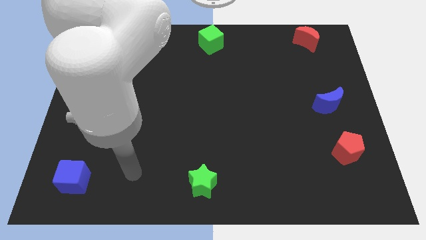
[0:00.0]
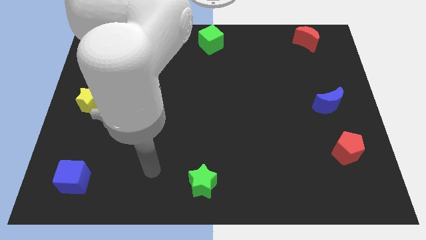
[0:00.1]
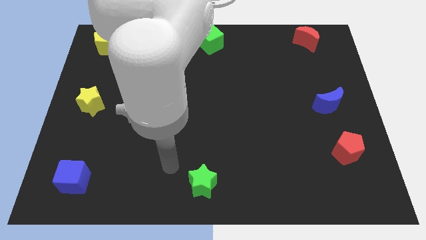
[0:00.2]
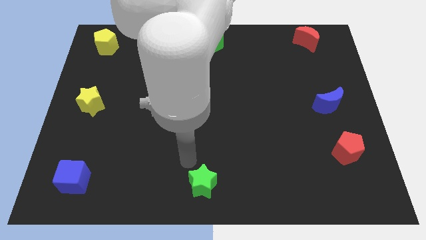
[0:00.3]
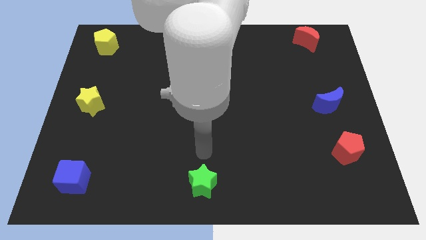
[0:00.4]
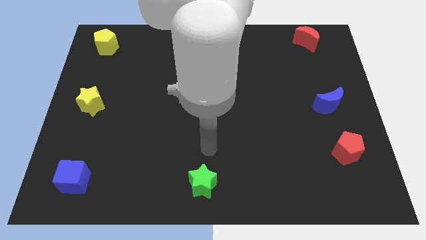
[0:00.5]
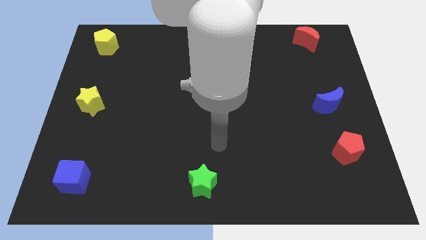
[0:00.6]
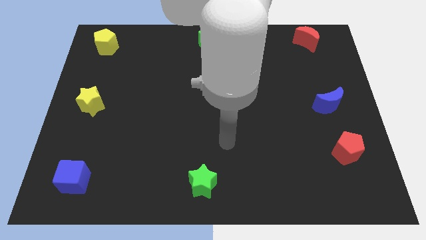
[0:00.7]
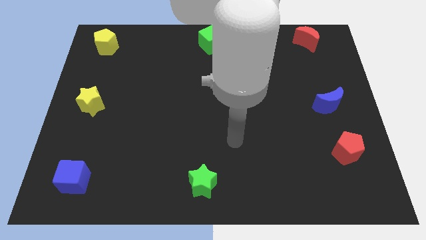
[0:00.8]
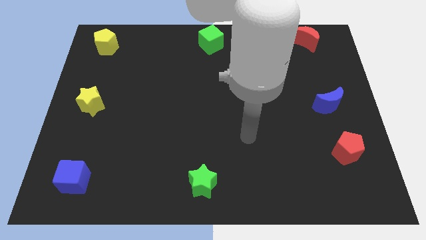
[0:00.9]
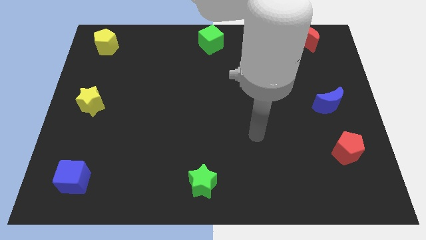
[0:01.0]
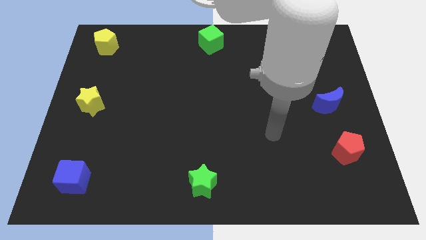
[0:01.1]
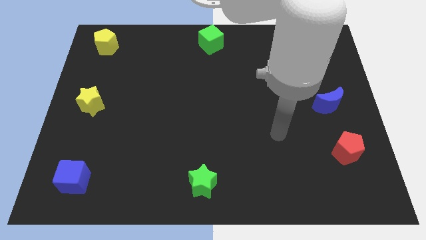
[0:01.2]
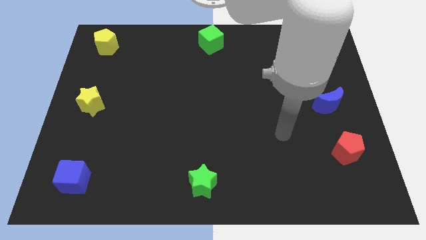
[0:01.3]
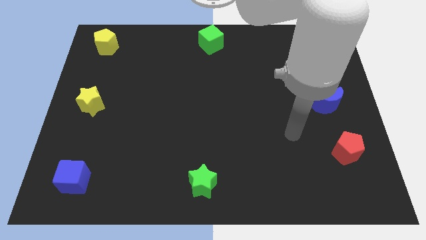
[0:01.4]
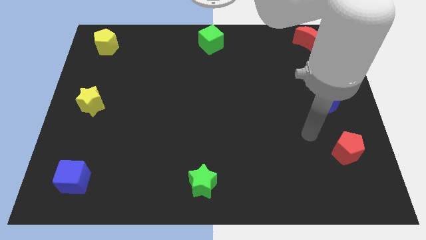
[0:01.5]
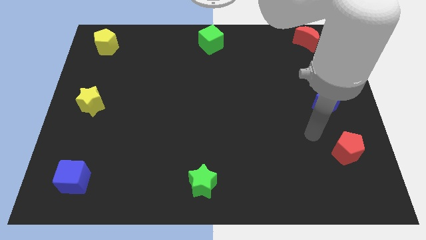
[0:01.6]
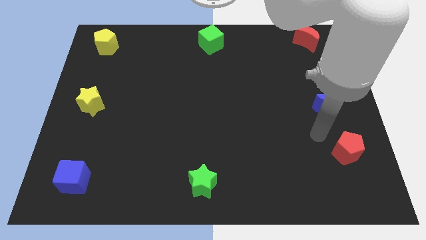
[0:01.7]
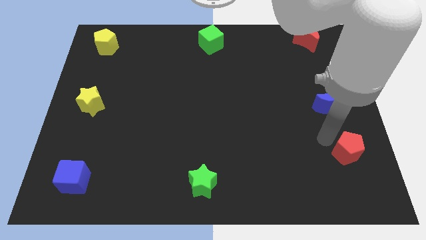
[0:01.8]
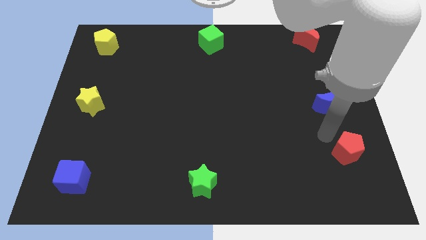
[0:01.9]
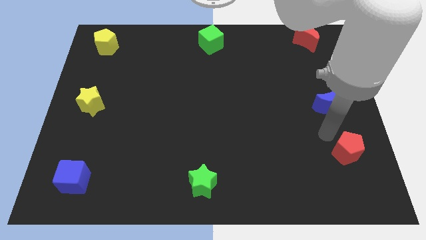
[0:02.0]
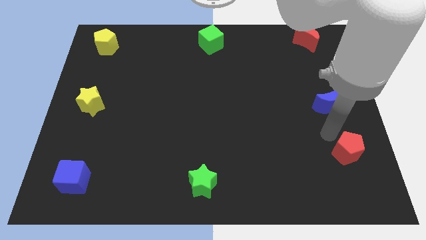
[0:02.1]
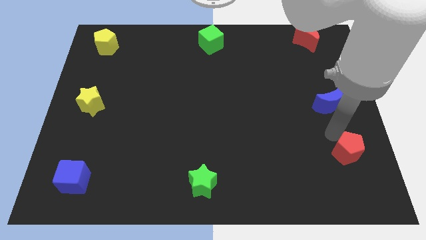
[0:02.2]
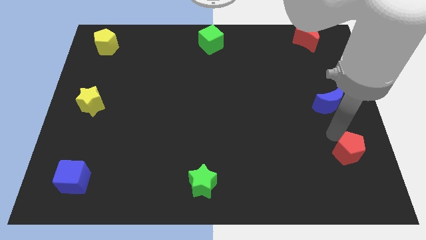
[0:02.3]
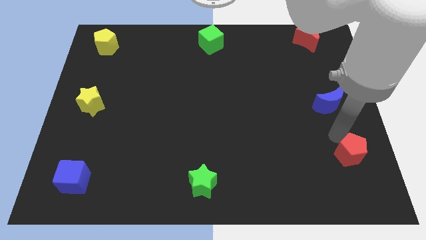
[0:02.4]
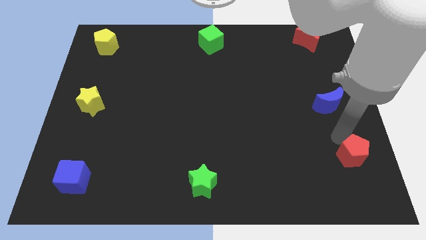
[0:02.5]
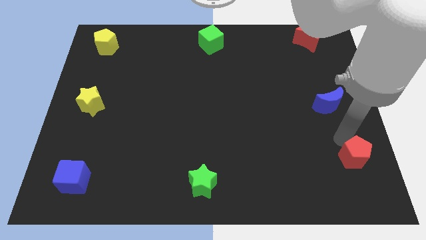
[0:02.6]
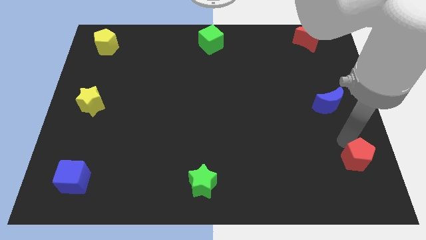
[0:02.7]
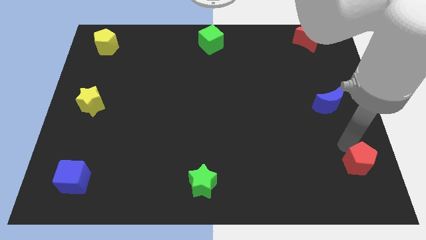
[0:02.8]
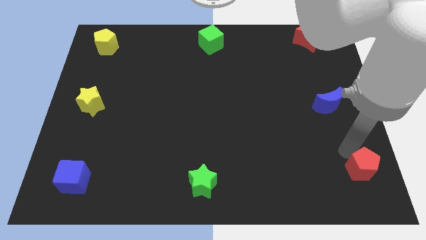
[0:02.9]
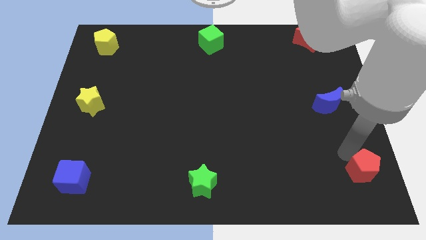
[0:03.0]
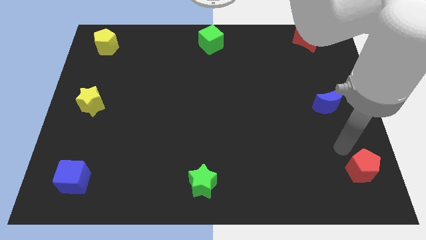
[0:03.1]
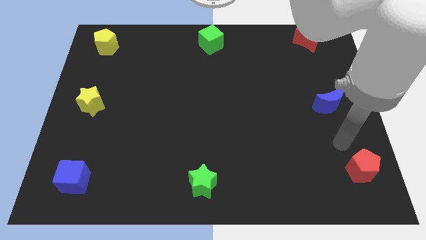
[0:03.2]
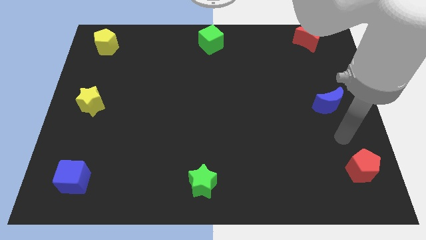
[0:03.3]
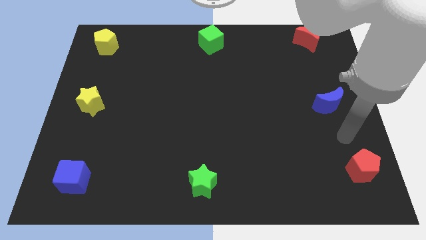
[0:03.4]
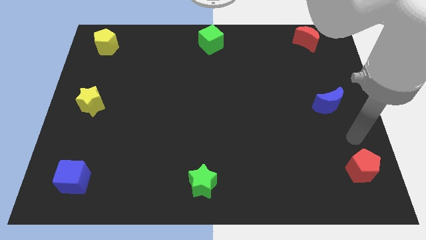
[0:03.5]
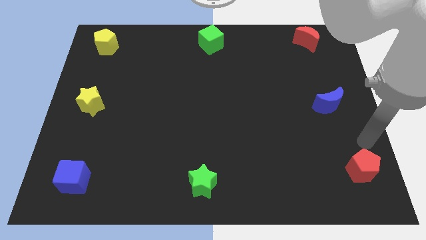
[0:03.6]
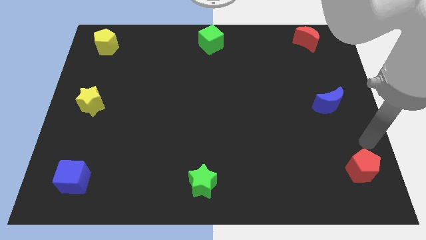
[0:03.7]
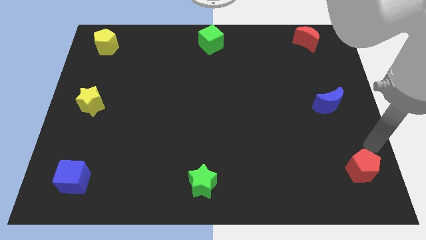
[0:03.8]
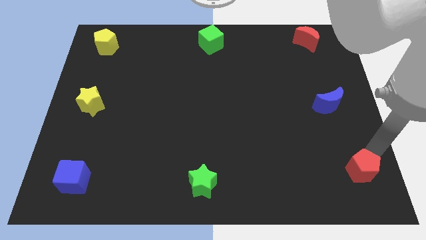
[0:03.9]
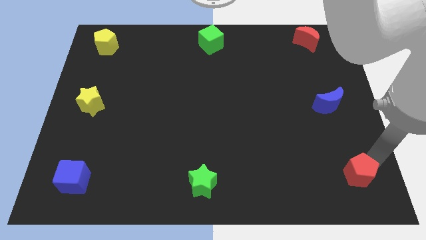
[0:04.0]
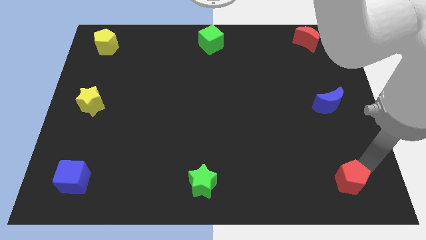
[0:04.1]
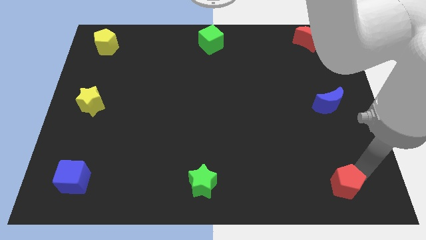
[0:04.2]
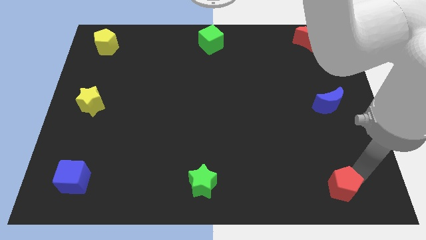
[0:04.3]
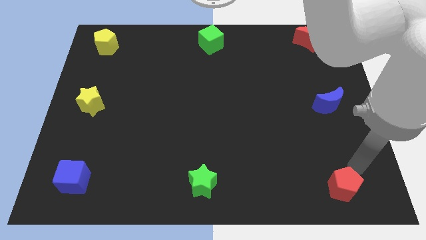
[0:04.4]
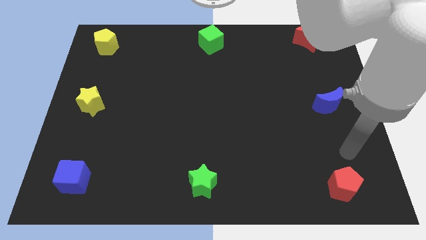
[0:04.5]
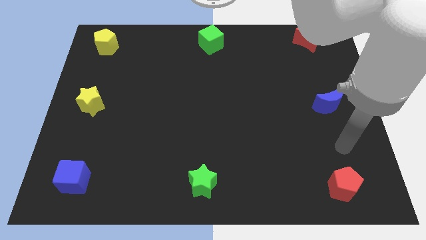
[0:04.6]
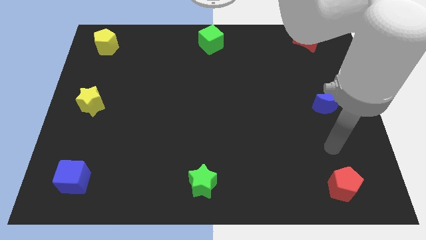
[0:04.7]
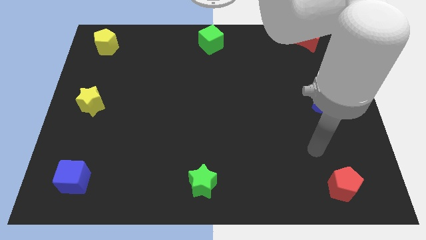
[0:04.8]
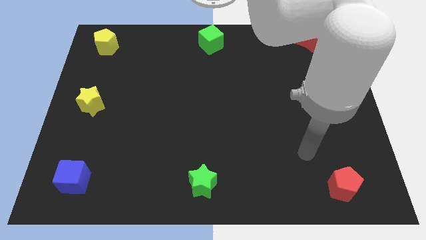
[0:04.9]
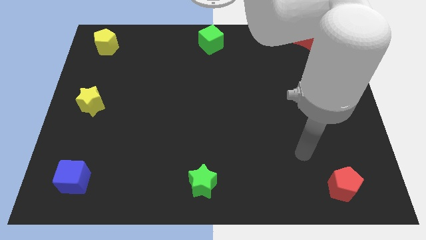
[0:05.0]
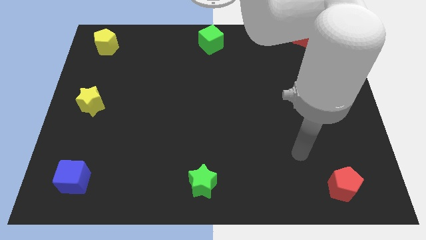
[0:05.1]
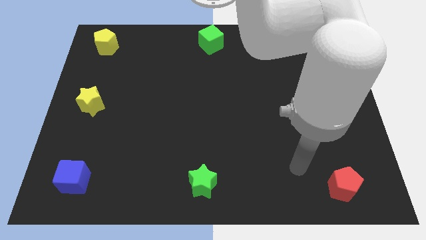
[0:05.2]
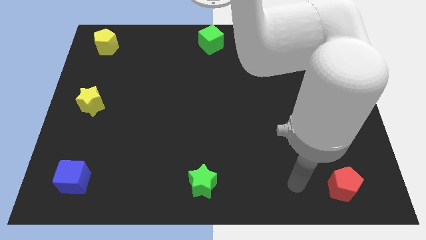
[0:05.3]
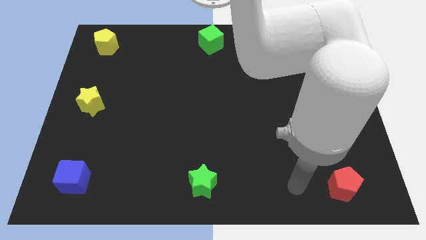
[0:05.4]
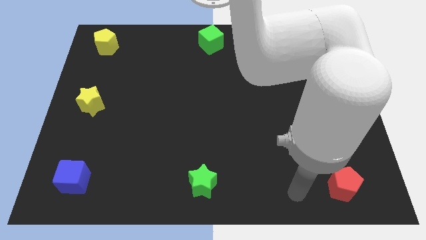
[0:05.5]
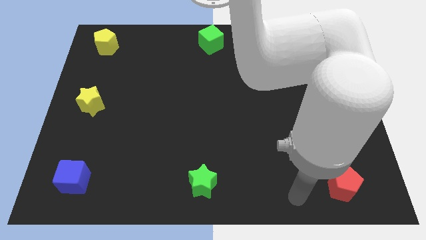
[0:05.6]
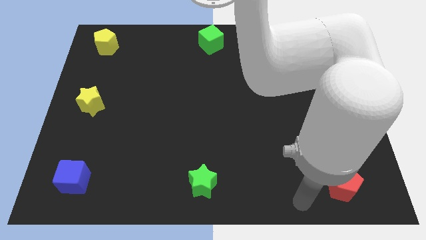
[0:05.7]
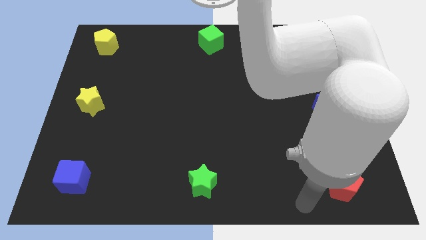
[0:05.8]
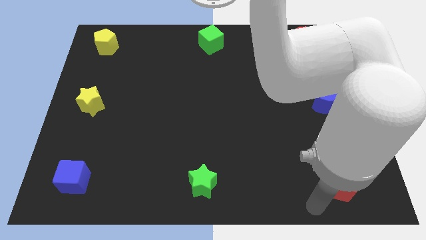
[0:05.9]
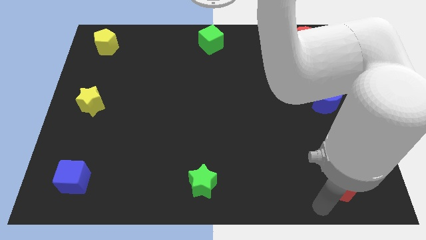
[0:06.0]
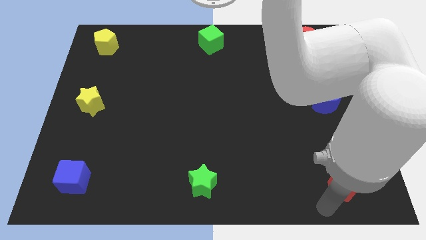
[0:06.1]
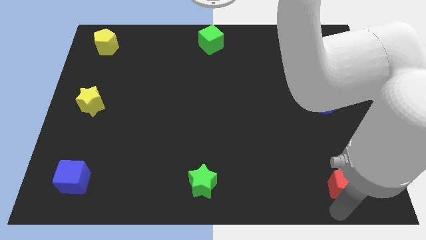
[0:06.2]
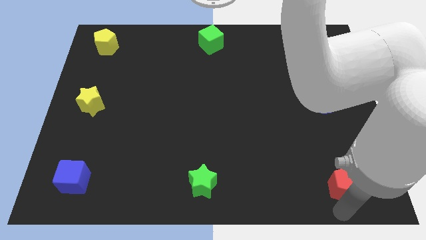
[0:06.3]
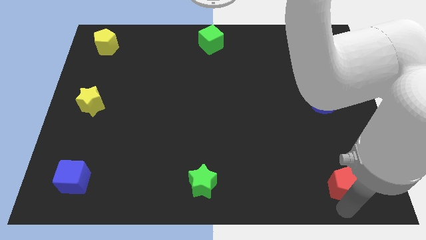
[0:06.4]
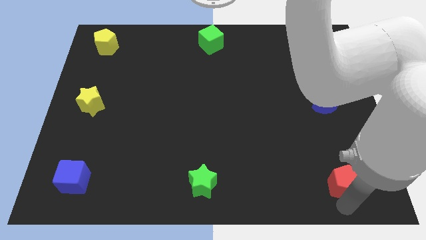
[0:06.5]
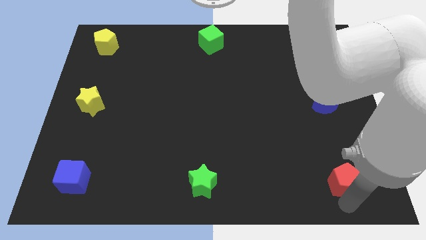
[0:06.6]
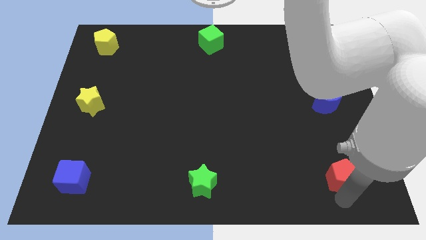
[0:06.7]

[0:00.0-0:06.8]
slide red pentagon slightly down to the right of green star

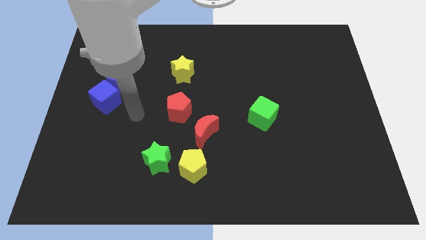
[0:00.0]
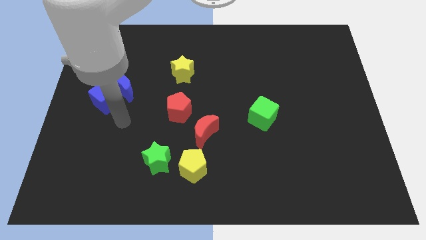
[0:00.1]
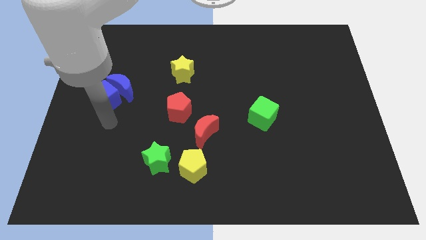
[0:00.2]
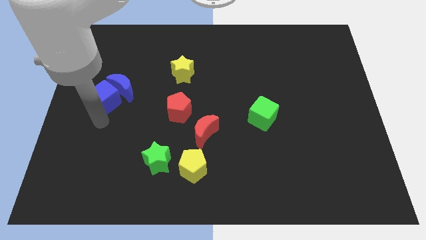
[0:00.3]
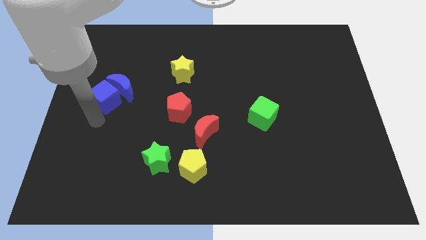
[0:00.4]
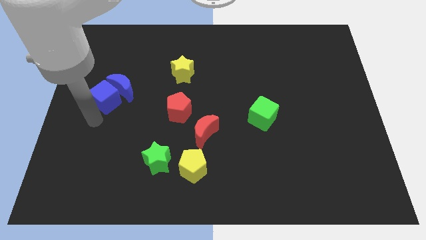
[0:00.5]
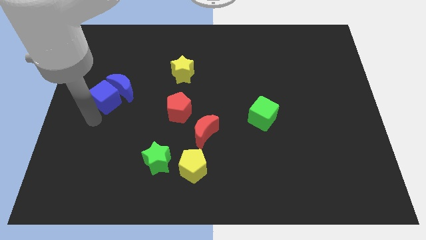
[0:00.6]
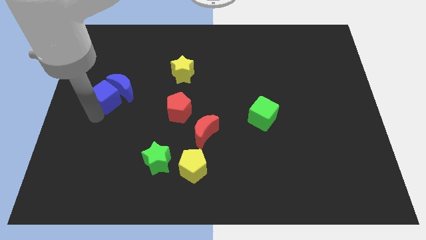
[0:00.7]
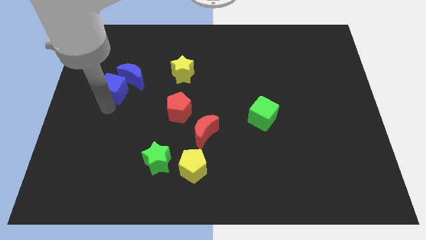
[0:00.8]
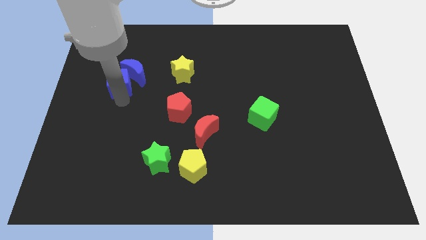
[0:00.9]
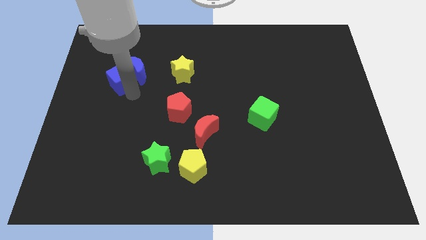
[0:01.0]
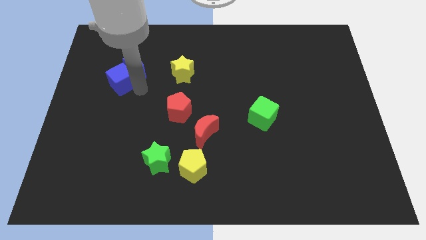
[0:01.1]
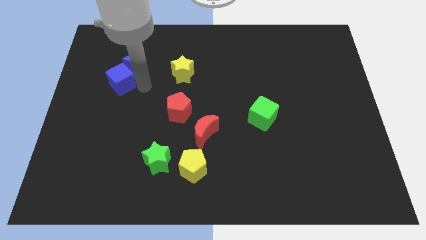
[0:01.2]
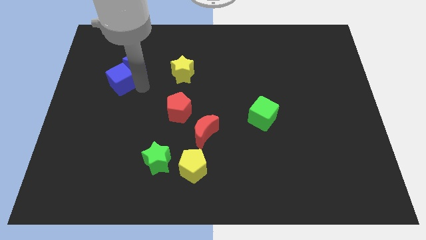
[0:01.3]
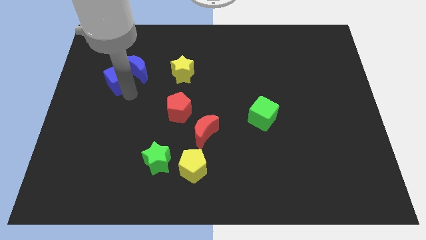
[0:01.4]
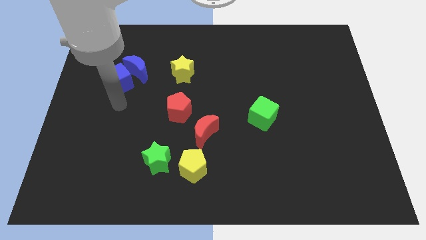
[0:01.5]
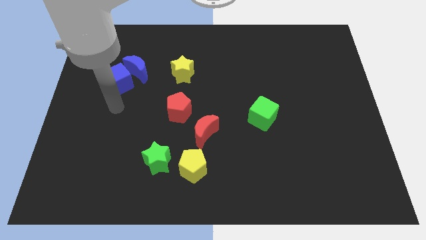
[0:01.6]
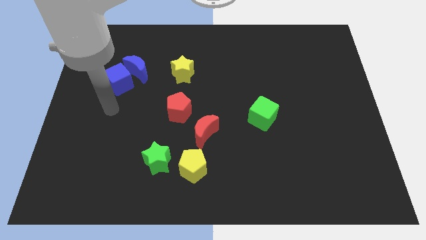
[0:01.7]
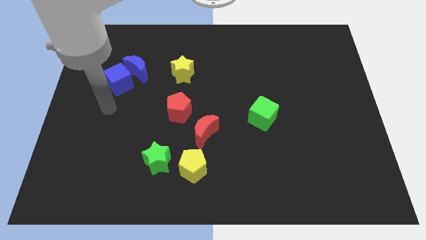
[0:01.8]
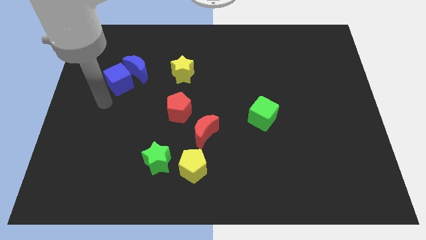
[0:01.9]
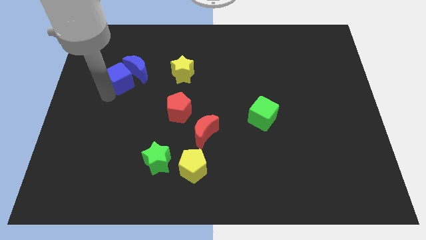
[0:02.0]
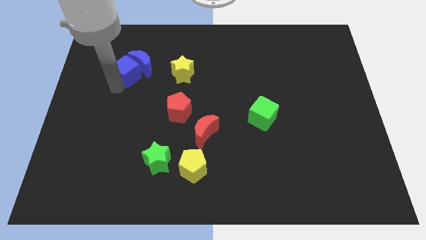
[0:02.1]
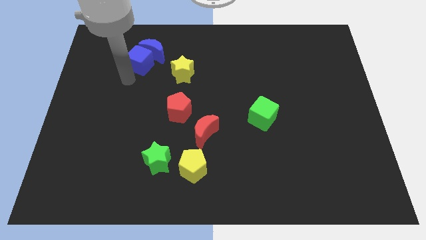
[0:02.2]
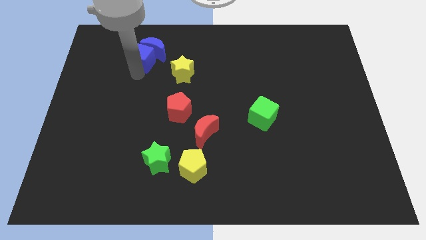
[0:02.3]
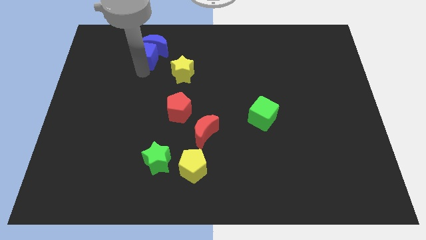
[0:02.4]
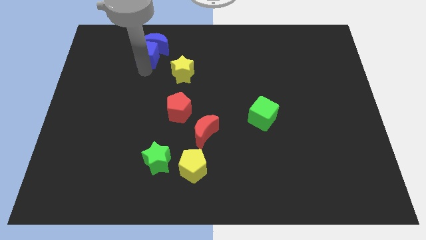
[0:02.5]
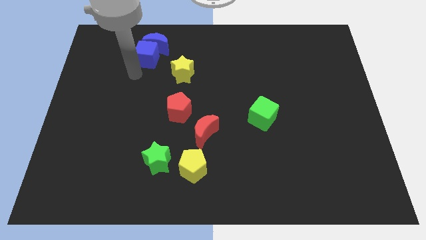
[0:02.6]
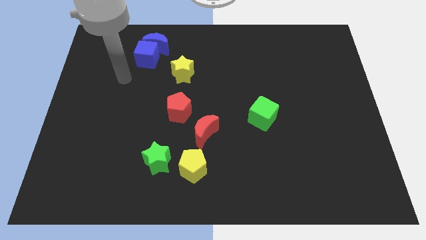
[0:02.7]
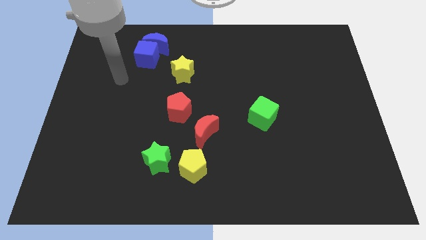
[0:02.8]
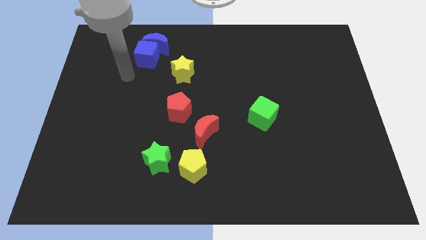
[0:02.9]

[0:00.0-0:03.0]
move the blue blocks towards the top center of the board
